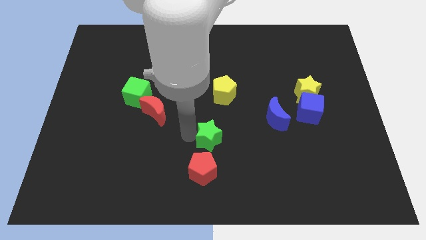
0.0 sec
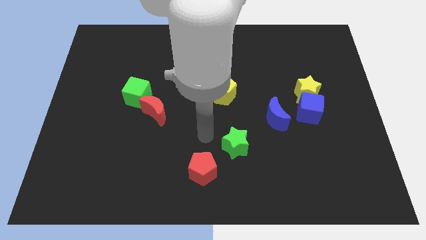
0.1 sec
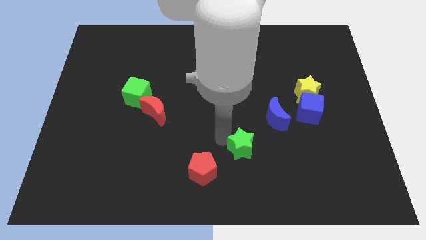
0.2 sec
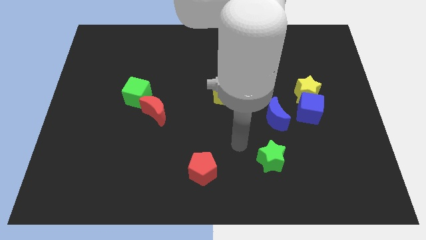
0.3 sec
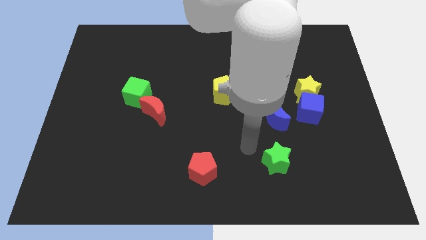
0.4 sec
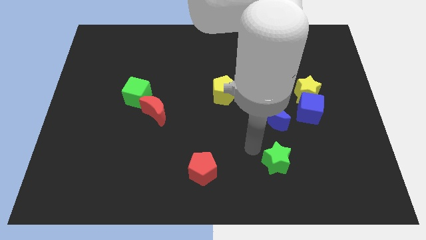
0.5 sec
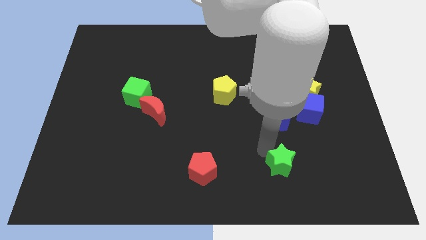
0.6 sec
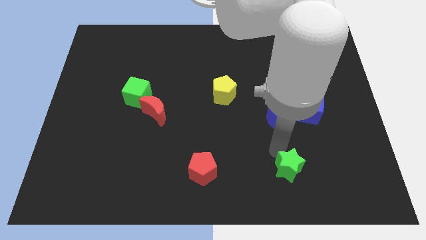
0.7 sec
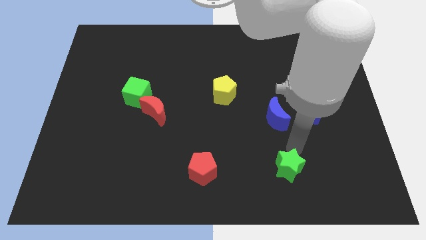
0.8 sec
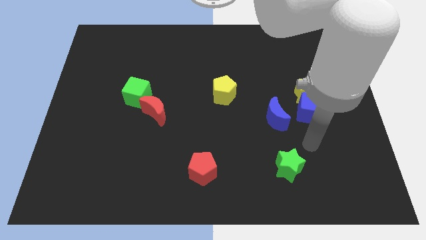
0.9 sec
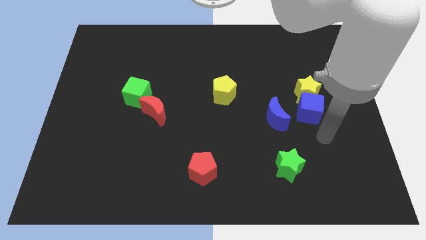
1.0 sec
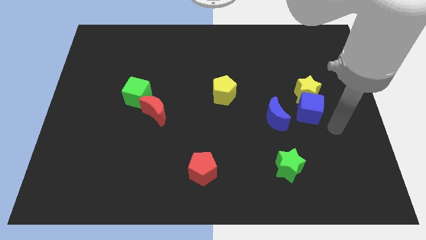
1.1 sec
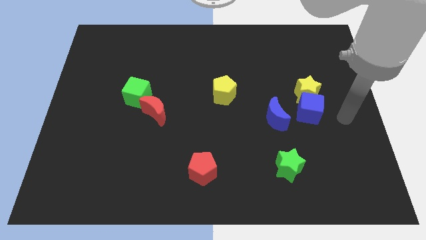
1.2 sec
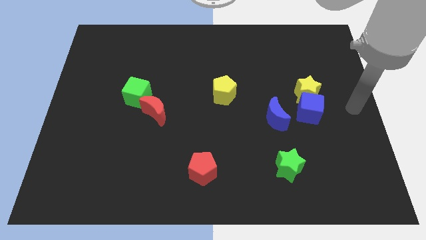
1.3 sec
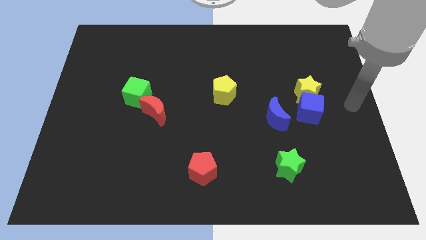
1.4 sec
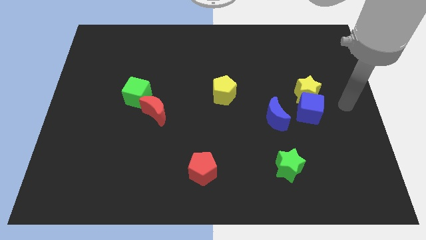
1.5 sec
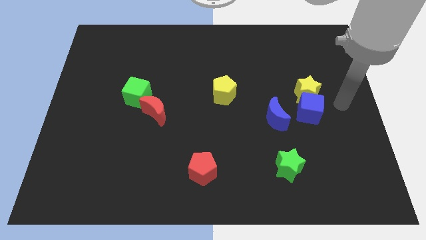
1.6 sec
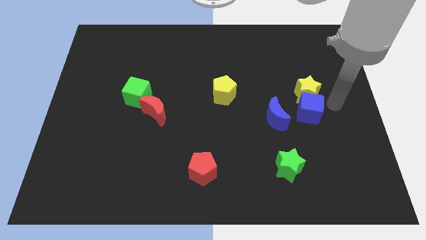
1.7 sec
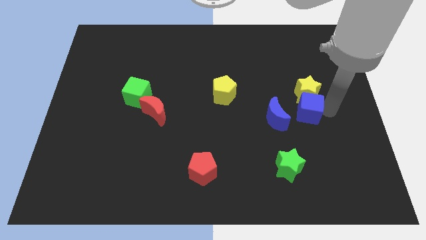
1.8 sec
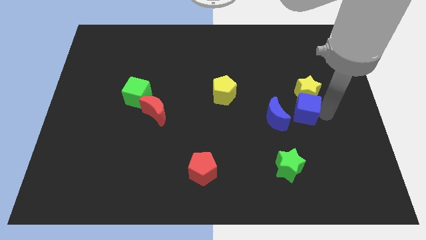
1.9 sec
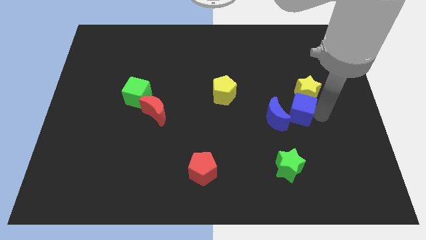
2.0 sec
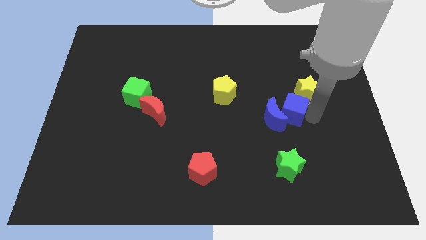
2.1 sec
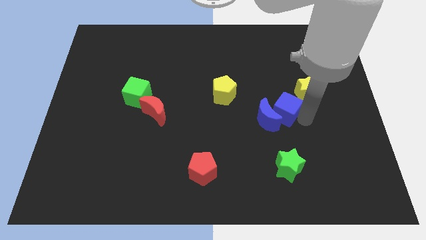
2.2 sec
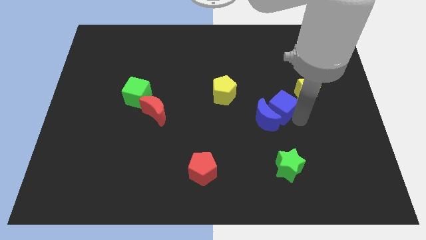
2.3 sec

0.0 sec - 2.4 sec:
push blue cube into blue moon

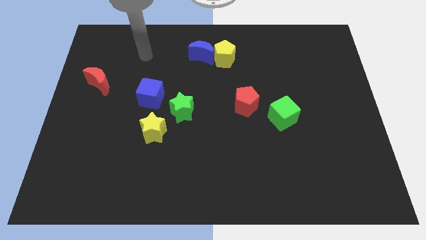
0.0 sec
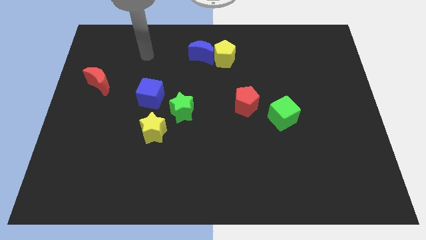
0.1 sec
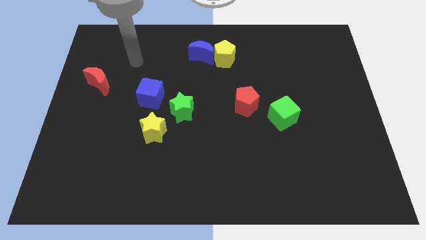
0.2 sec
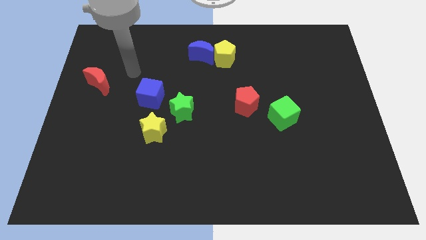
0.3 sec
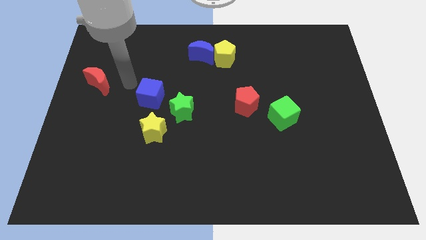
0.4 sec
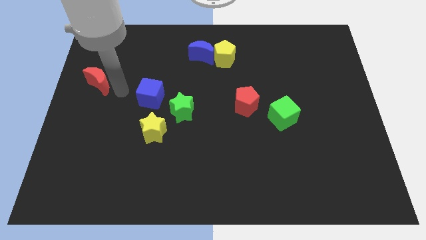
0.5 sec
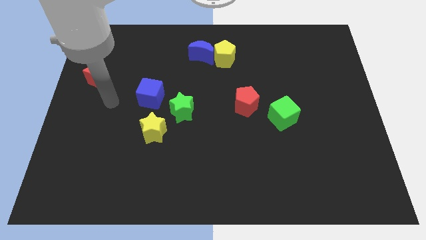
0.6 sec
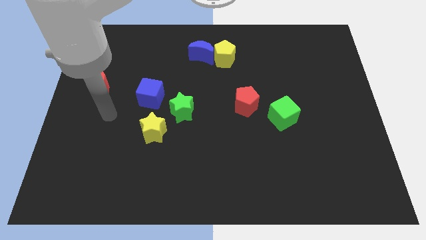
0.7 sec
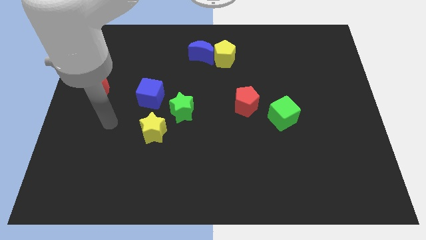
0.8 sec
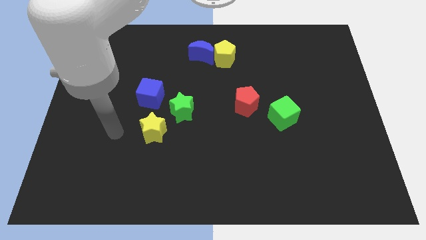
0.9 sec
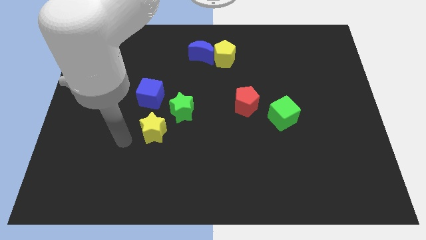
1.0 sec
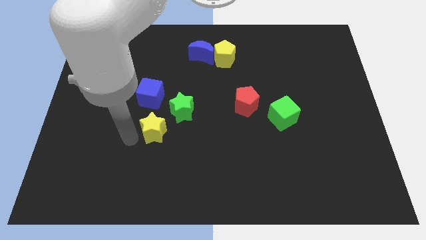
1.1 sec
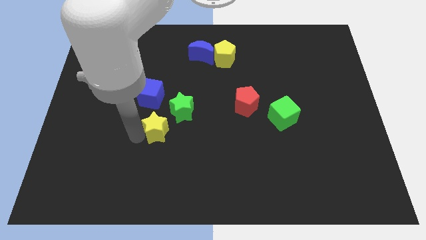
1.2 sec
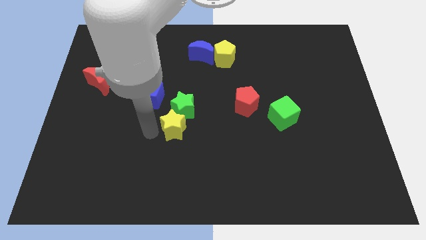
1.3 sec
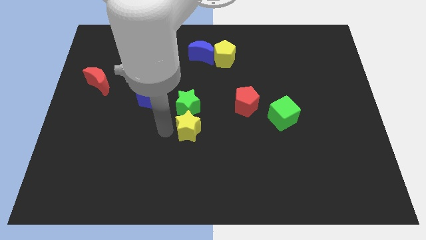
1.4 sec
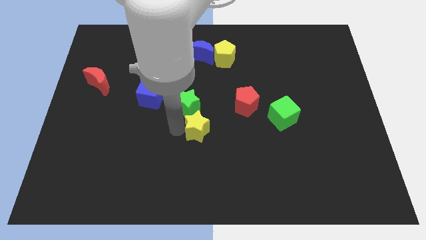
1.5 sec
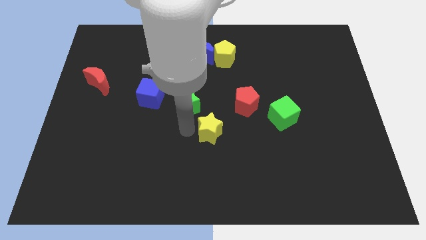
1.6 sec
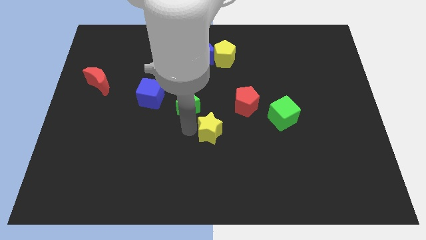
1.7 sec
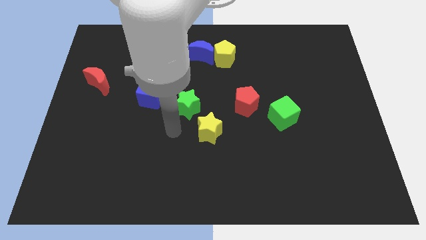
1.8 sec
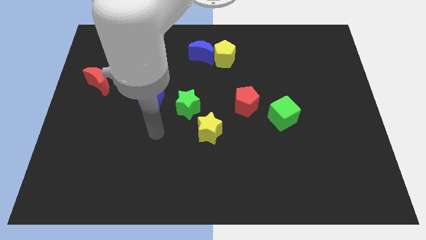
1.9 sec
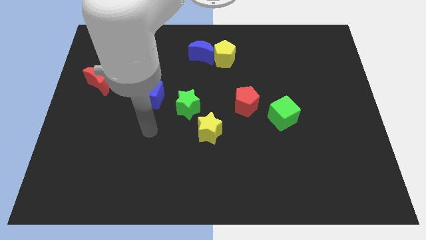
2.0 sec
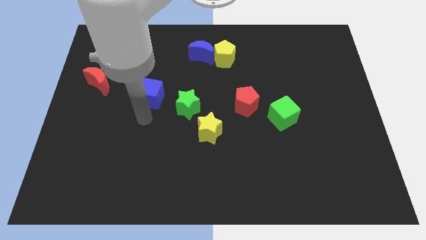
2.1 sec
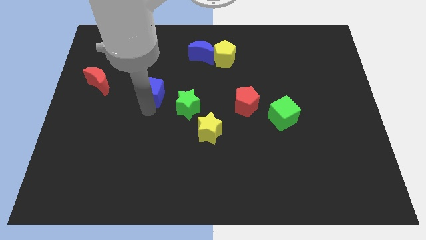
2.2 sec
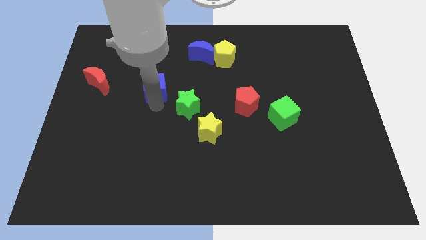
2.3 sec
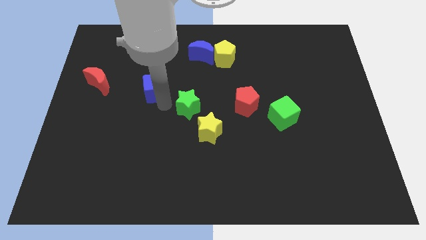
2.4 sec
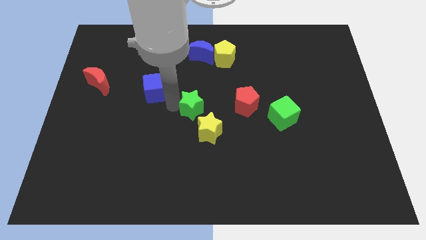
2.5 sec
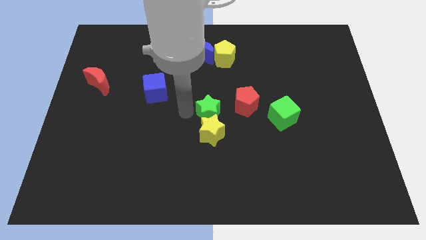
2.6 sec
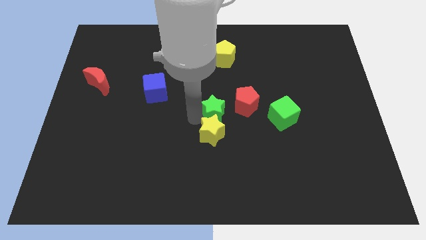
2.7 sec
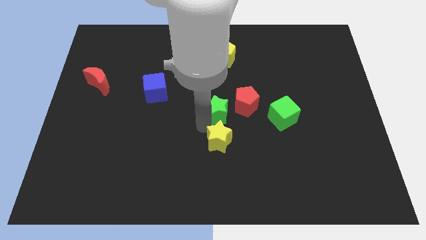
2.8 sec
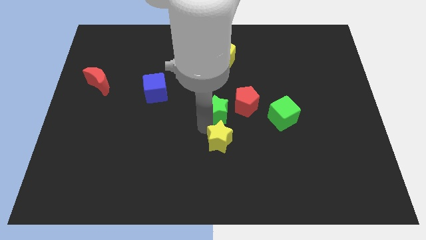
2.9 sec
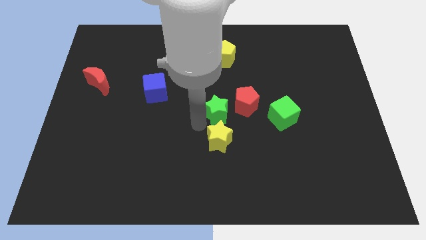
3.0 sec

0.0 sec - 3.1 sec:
put the green star vertically above the yellow star

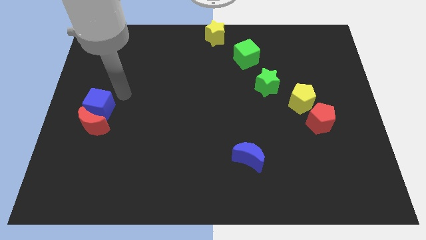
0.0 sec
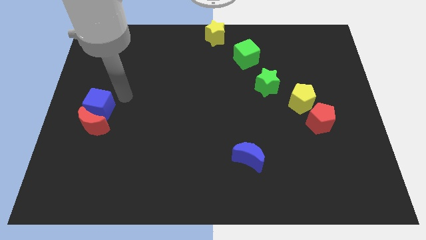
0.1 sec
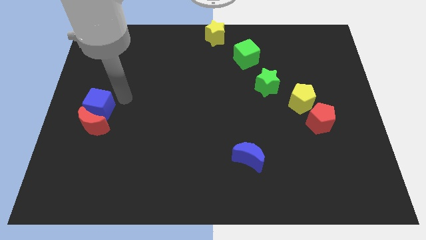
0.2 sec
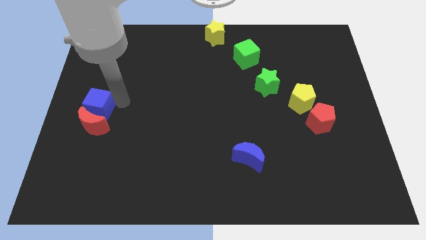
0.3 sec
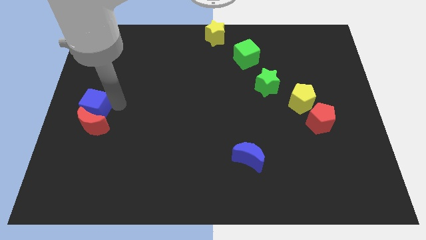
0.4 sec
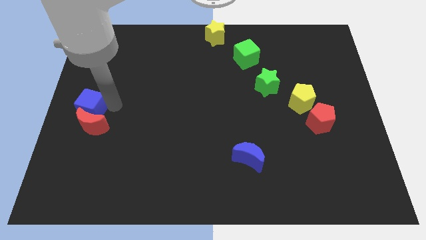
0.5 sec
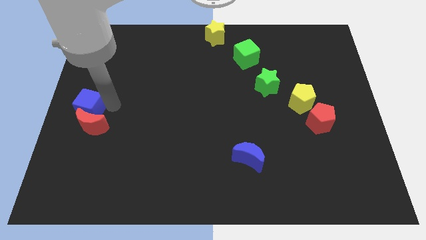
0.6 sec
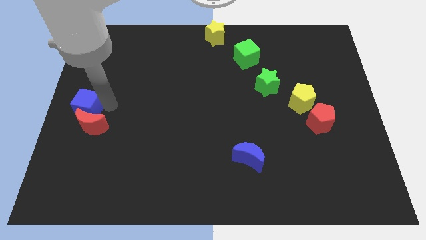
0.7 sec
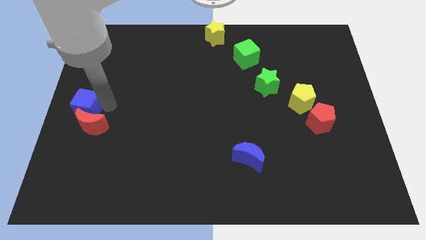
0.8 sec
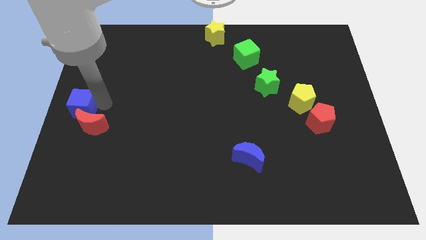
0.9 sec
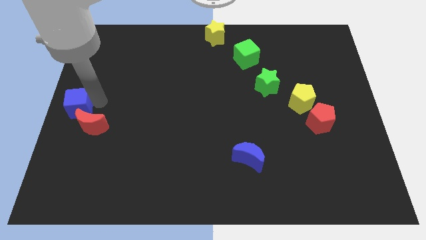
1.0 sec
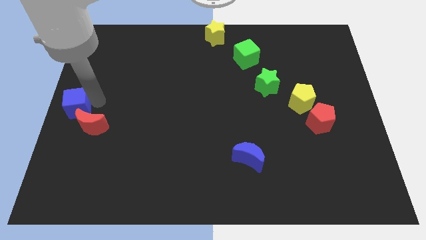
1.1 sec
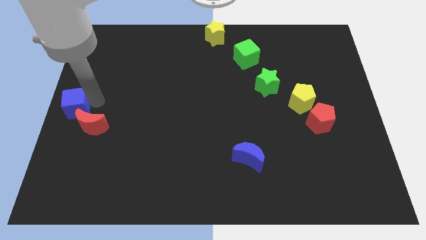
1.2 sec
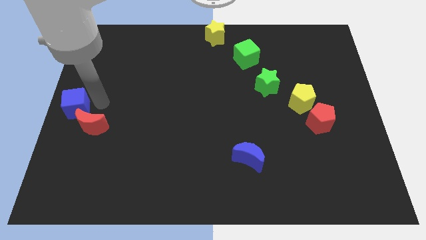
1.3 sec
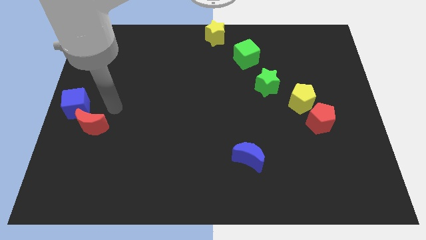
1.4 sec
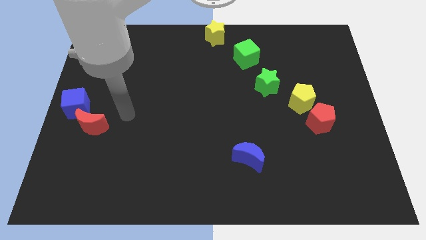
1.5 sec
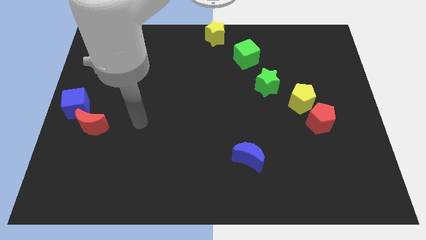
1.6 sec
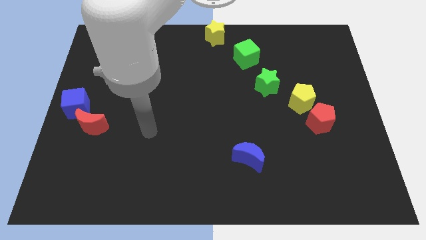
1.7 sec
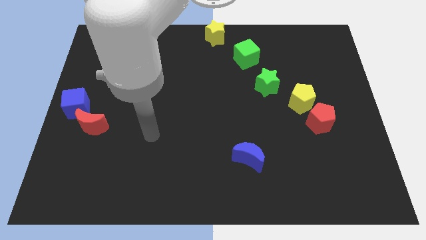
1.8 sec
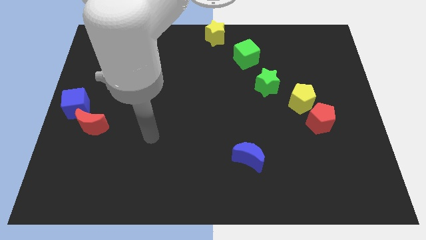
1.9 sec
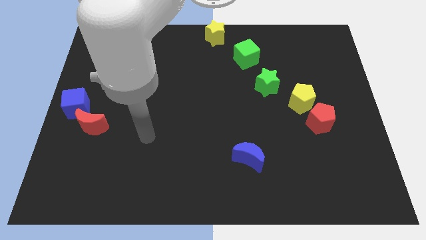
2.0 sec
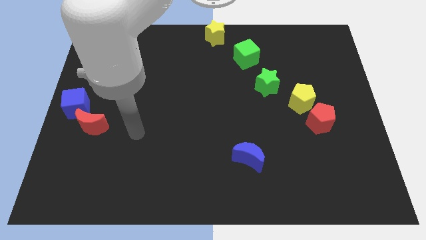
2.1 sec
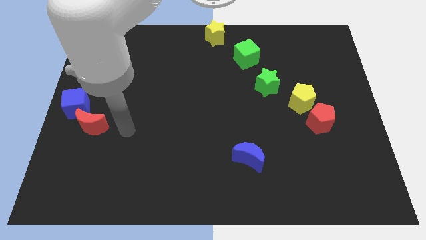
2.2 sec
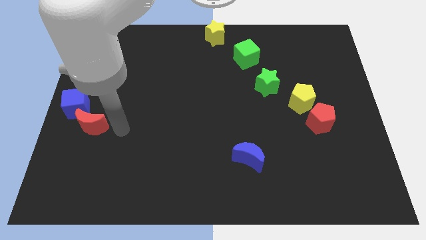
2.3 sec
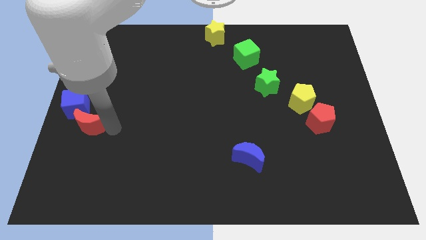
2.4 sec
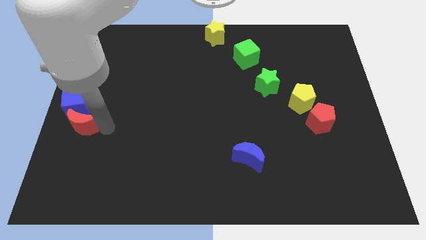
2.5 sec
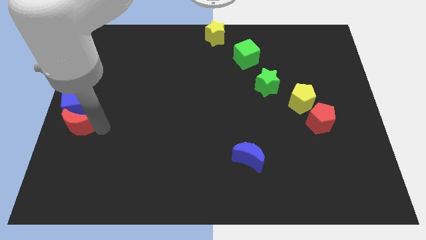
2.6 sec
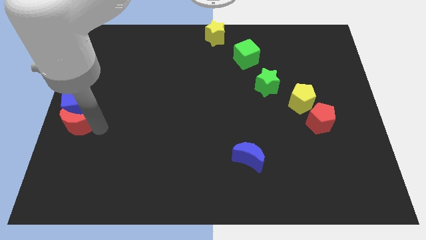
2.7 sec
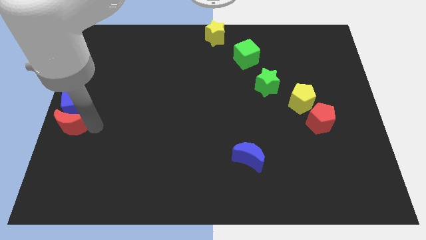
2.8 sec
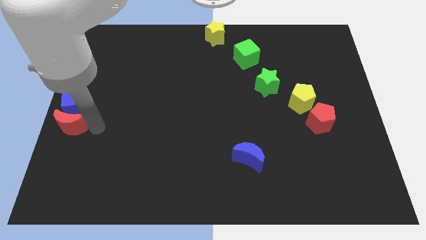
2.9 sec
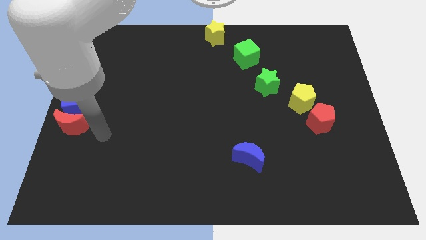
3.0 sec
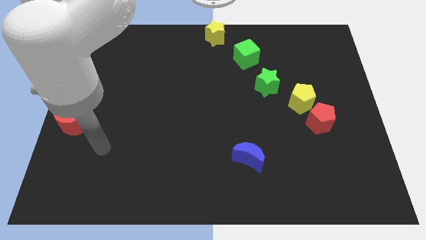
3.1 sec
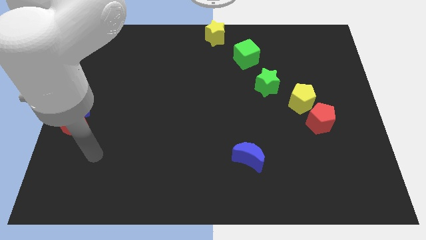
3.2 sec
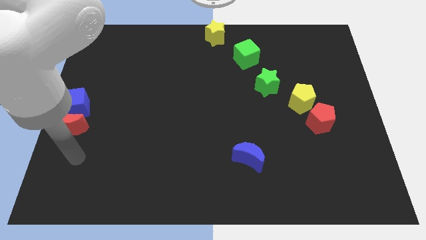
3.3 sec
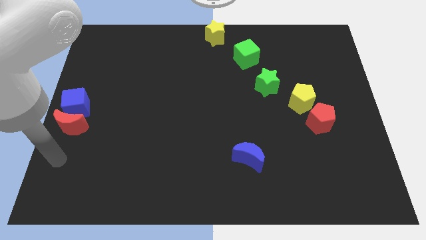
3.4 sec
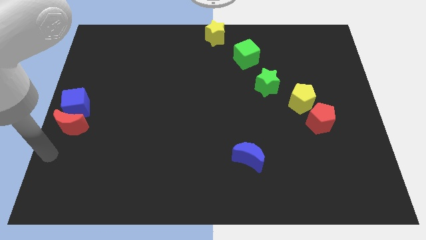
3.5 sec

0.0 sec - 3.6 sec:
drag the blue cube and the red moon towards the left centre of the board
